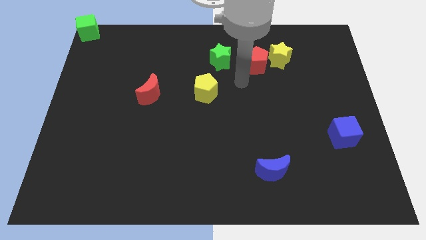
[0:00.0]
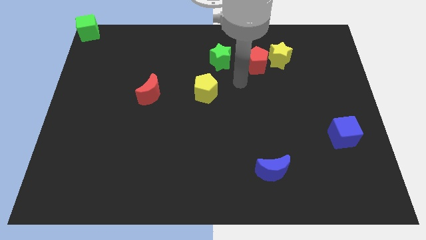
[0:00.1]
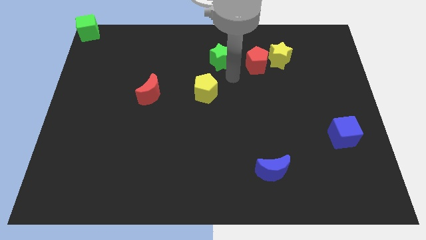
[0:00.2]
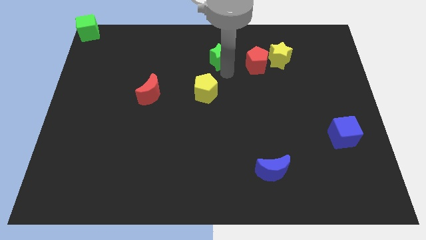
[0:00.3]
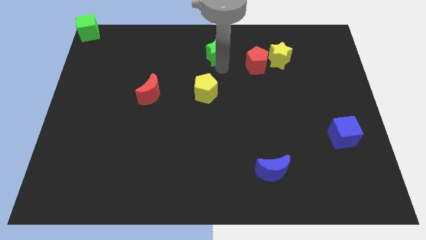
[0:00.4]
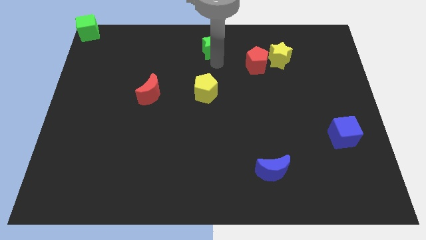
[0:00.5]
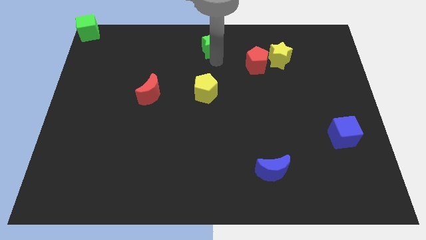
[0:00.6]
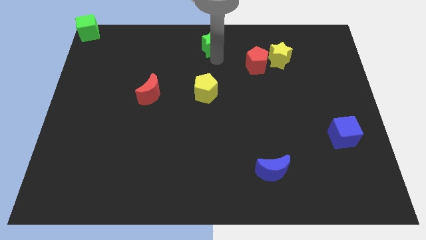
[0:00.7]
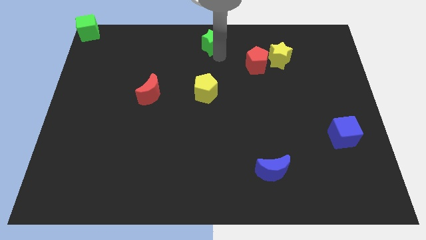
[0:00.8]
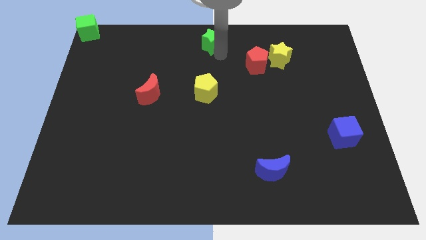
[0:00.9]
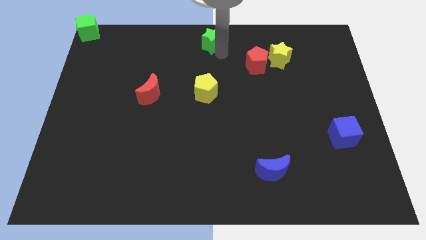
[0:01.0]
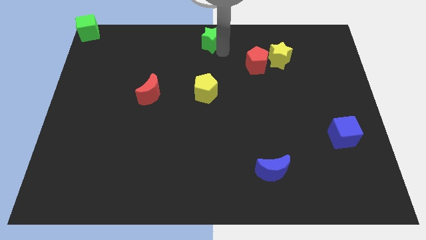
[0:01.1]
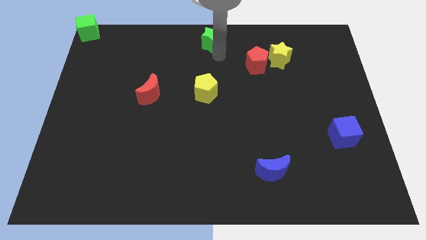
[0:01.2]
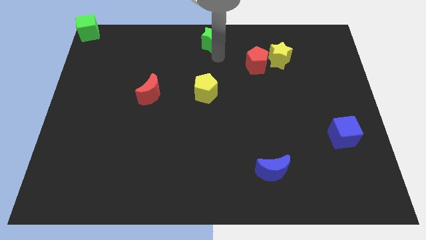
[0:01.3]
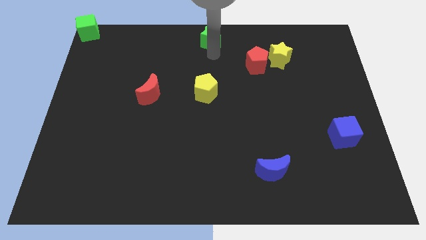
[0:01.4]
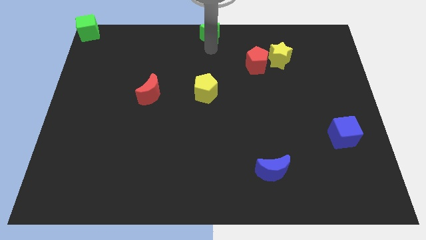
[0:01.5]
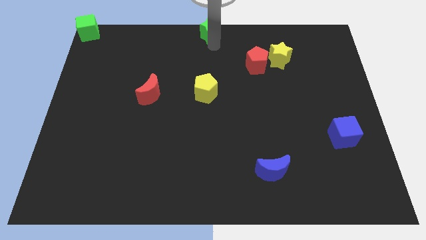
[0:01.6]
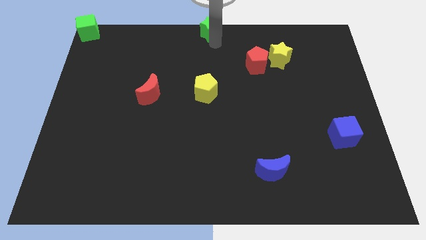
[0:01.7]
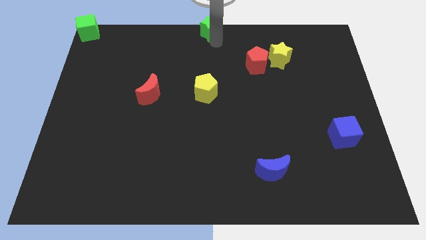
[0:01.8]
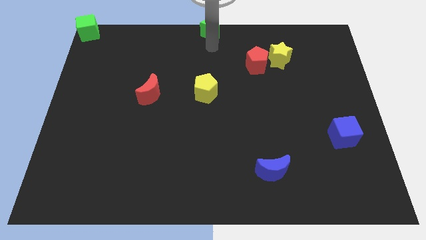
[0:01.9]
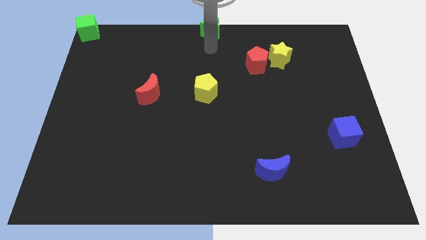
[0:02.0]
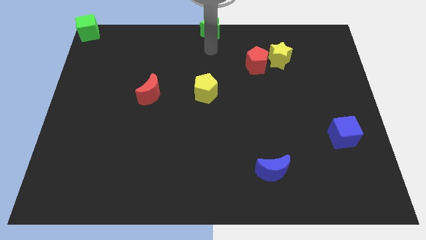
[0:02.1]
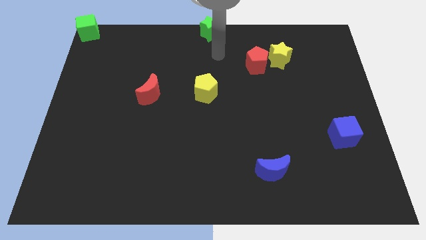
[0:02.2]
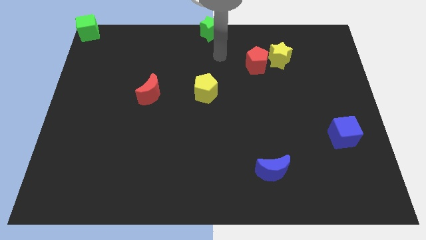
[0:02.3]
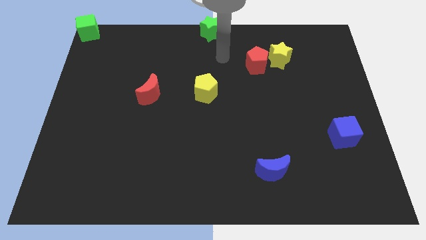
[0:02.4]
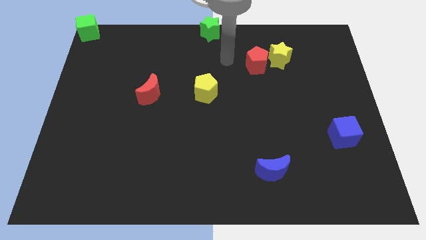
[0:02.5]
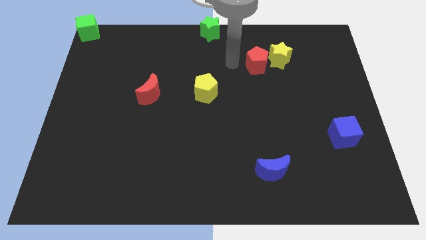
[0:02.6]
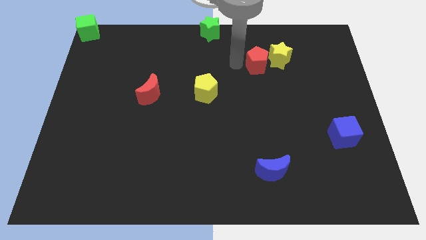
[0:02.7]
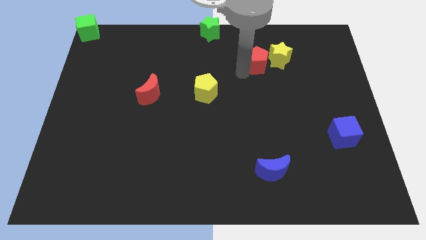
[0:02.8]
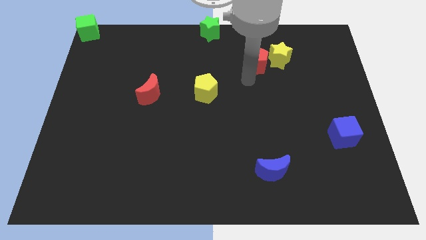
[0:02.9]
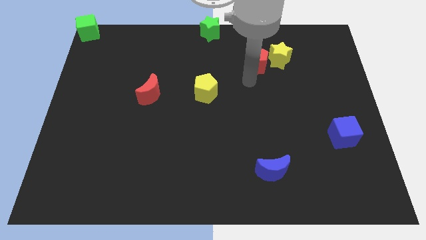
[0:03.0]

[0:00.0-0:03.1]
place the green star at the top center of the board

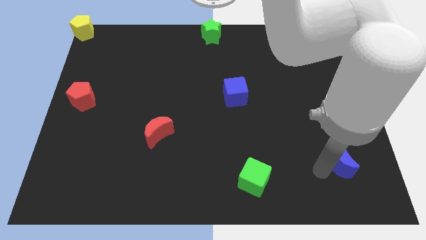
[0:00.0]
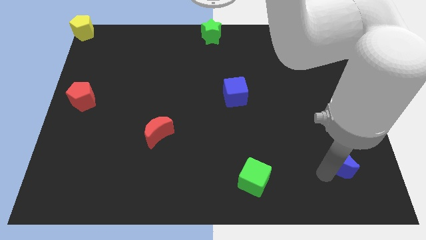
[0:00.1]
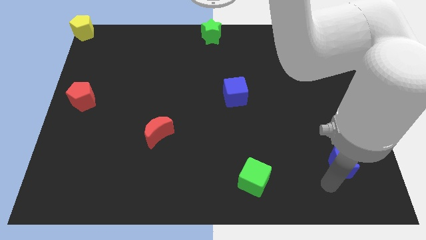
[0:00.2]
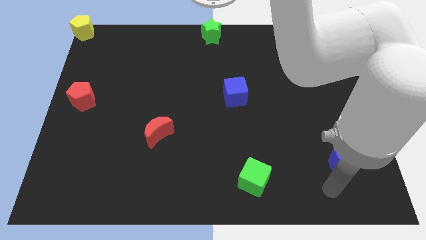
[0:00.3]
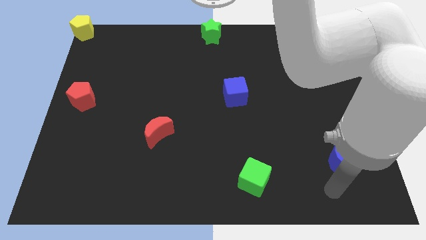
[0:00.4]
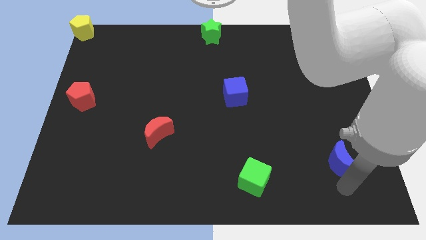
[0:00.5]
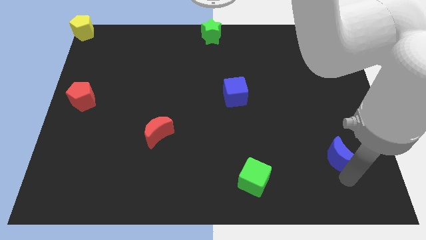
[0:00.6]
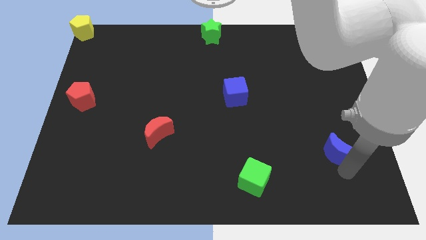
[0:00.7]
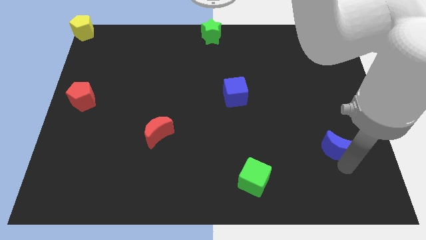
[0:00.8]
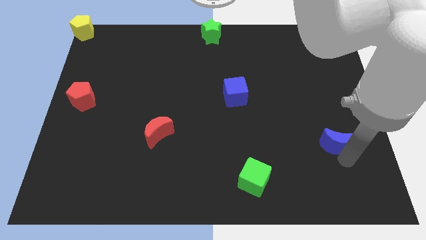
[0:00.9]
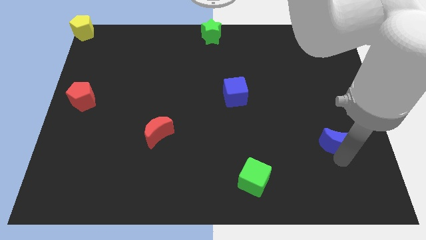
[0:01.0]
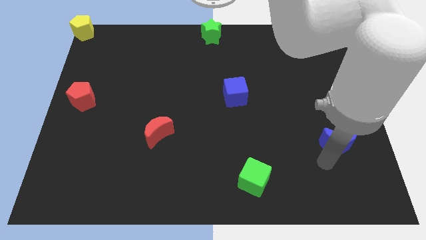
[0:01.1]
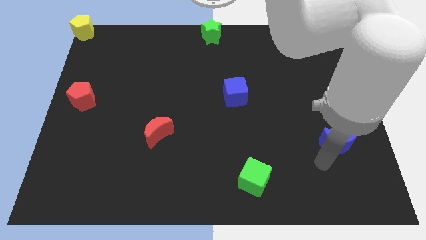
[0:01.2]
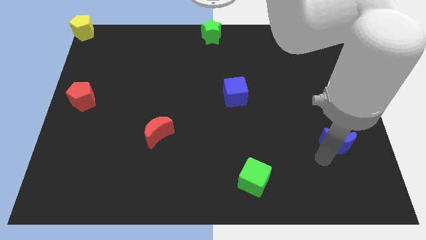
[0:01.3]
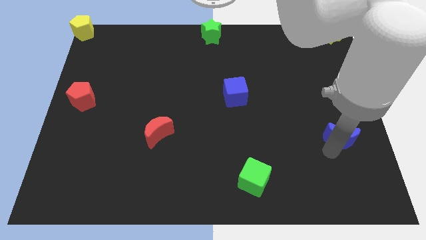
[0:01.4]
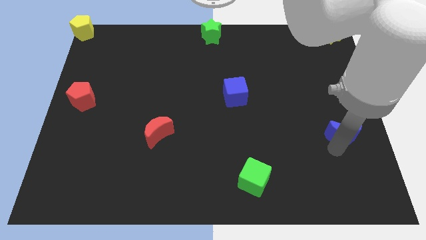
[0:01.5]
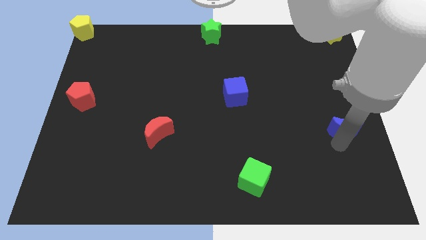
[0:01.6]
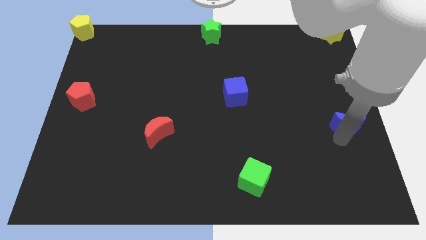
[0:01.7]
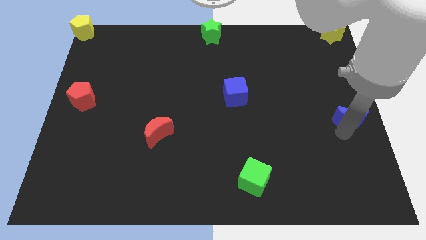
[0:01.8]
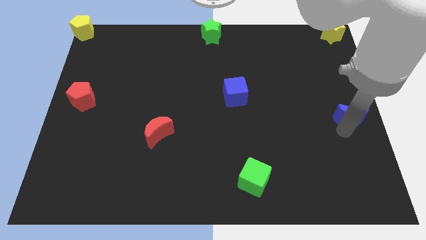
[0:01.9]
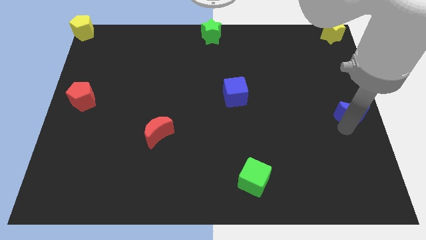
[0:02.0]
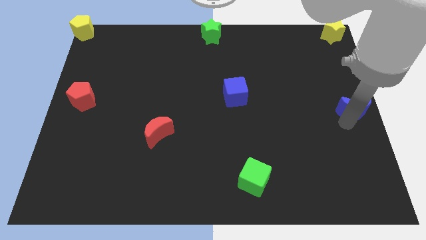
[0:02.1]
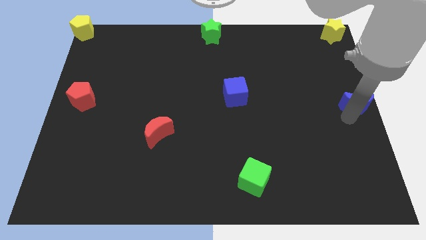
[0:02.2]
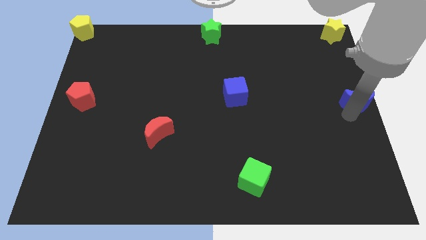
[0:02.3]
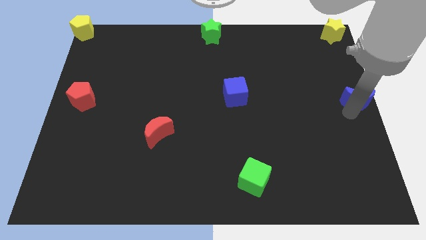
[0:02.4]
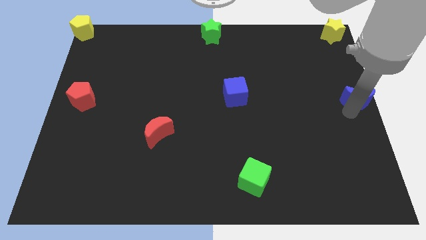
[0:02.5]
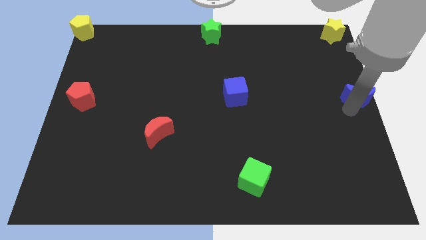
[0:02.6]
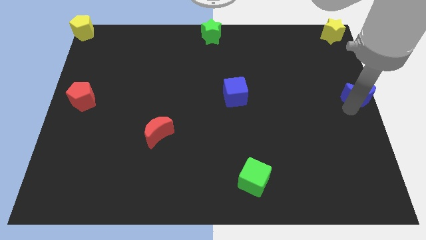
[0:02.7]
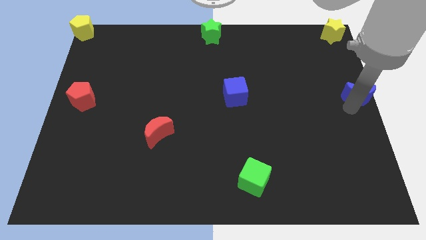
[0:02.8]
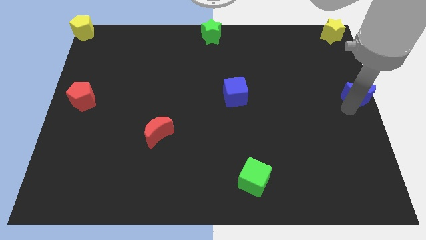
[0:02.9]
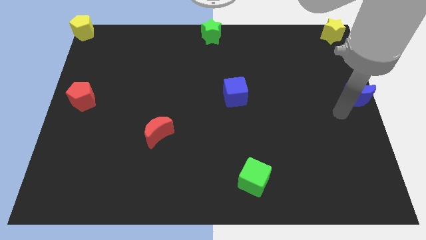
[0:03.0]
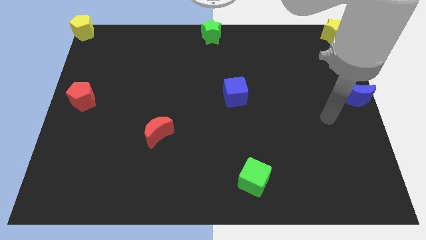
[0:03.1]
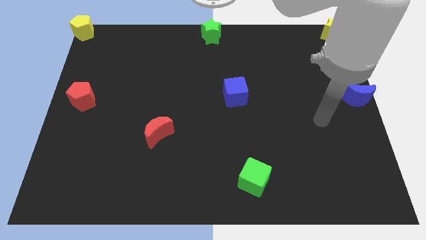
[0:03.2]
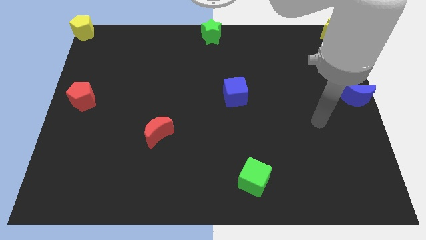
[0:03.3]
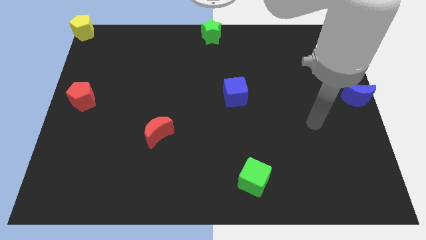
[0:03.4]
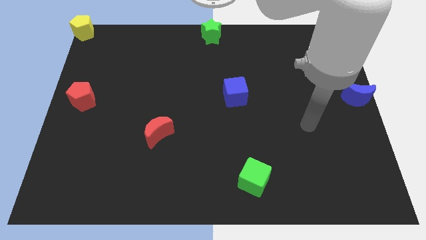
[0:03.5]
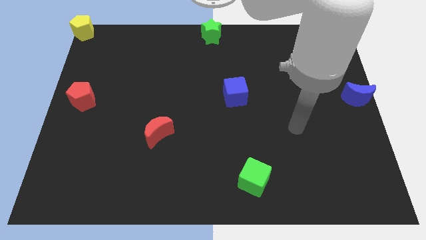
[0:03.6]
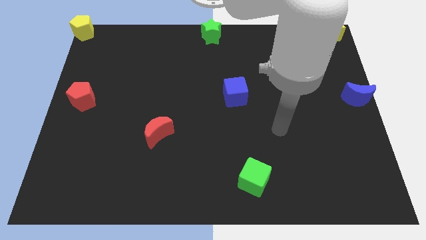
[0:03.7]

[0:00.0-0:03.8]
push the blue moon towards the right side of the board

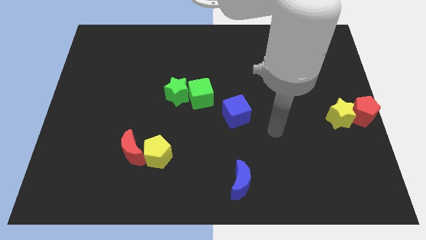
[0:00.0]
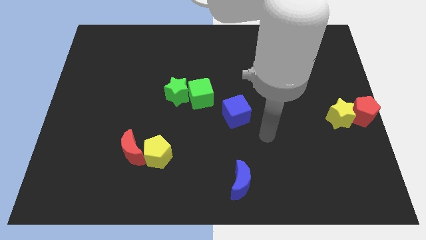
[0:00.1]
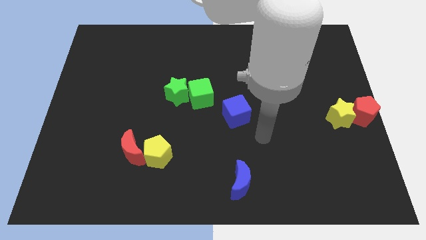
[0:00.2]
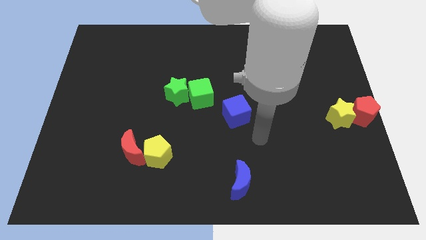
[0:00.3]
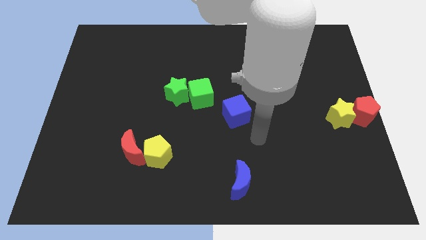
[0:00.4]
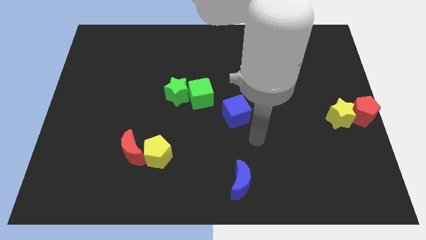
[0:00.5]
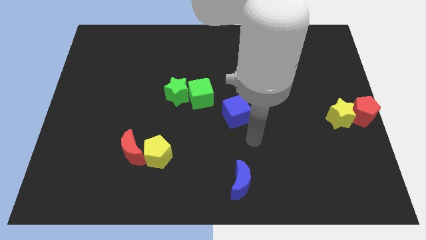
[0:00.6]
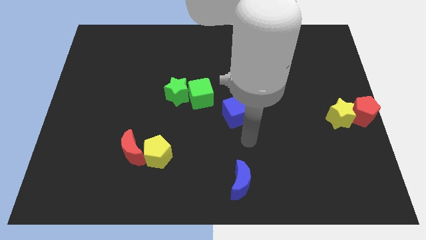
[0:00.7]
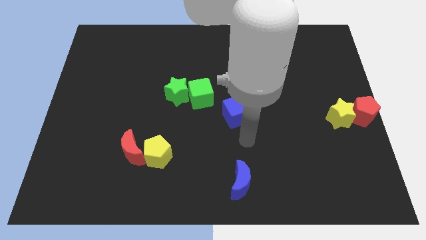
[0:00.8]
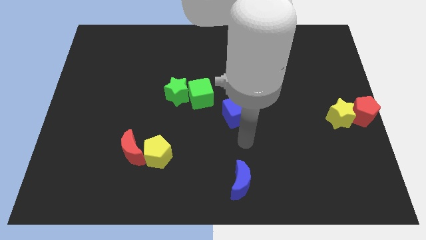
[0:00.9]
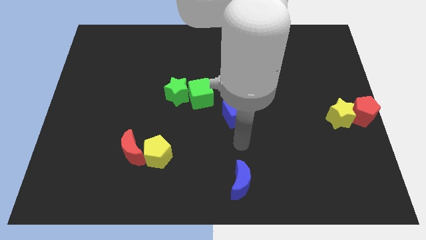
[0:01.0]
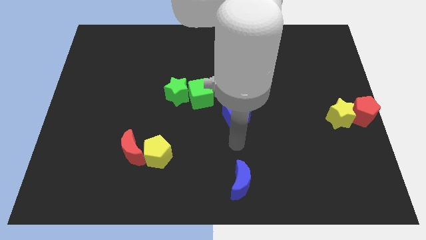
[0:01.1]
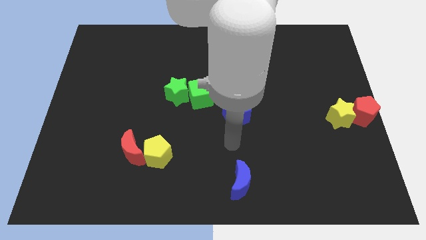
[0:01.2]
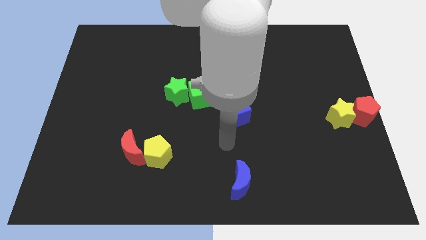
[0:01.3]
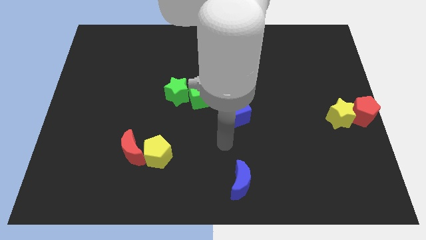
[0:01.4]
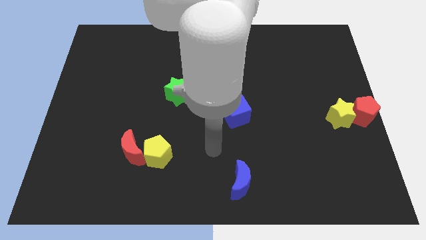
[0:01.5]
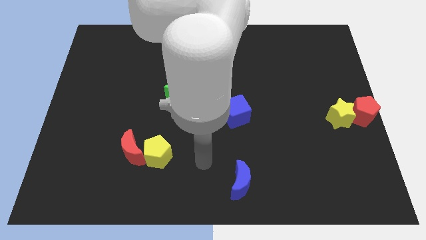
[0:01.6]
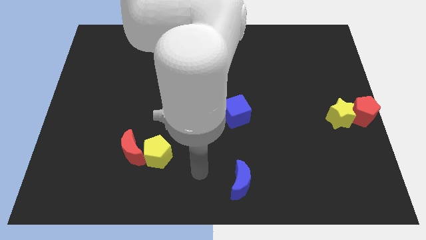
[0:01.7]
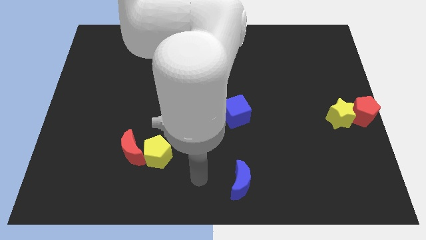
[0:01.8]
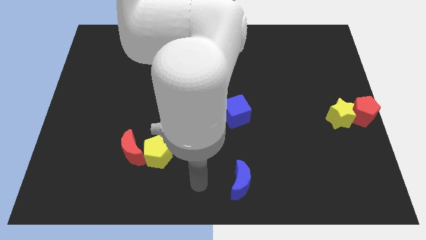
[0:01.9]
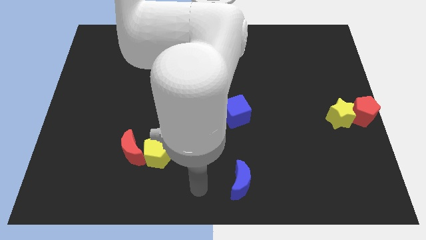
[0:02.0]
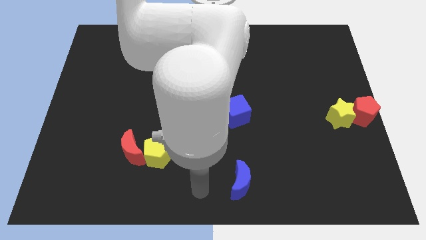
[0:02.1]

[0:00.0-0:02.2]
place your arm to the left of blue moon
